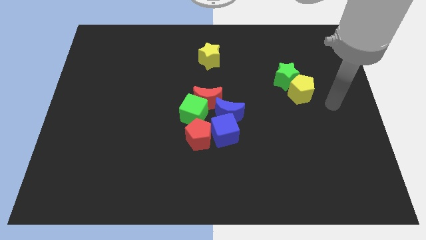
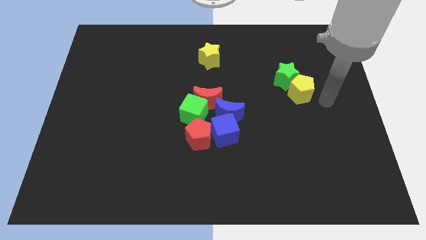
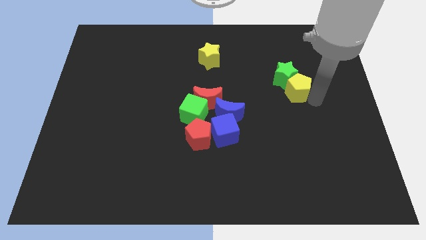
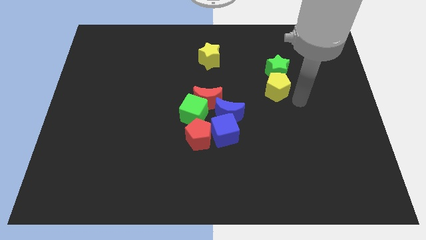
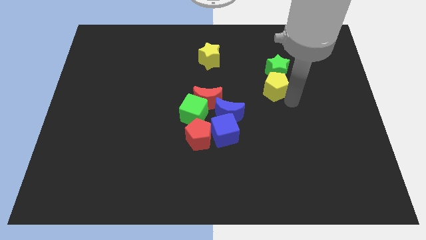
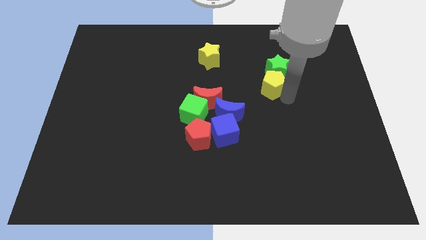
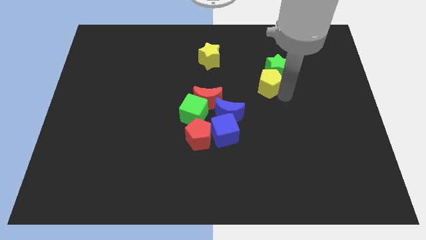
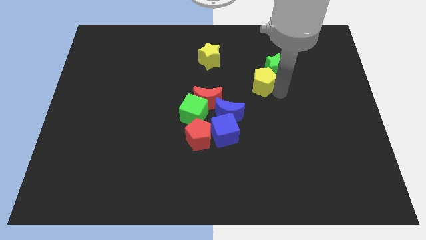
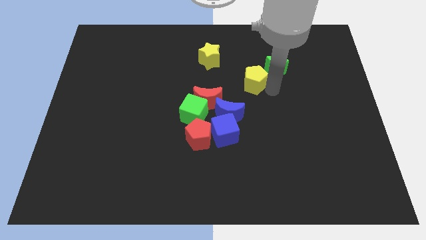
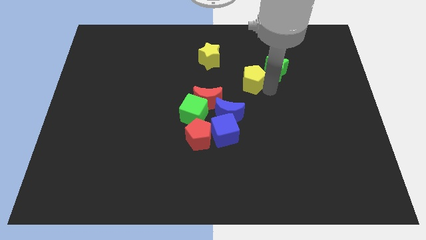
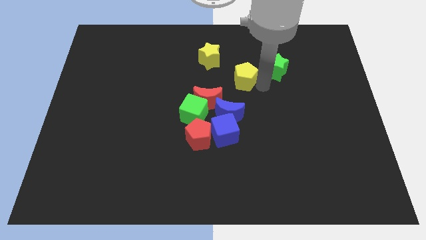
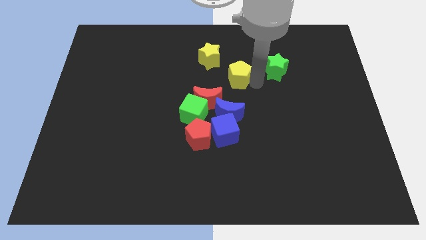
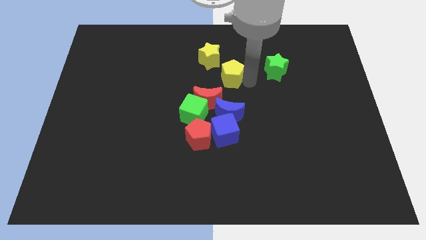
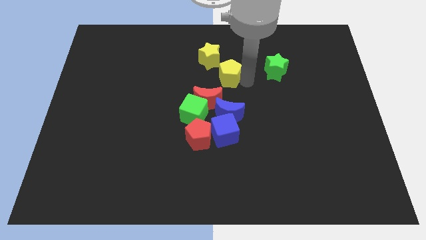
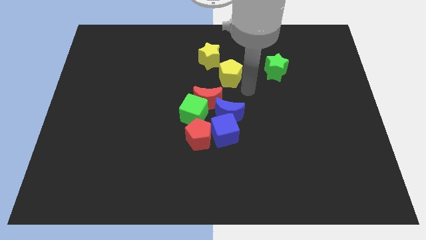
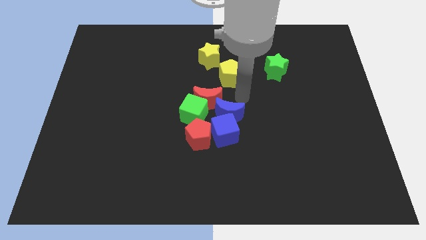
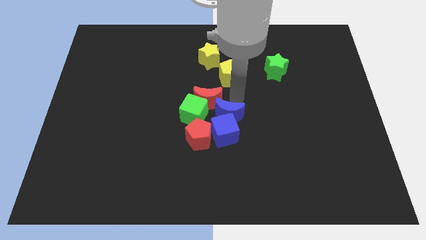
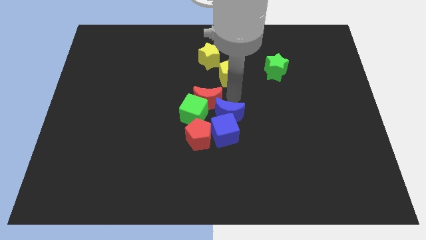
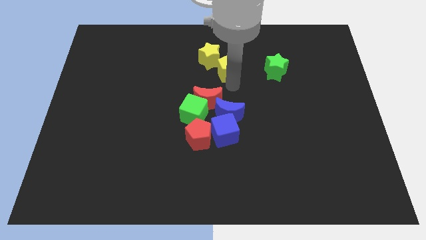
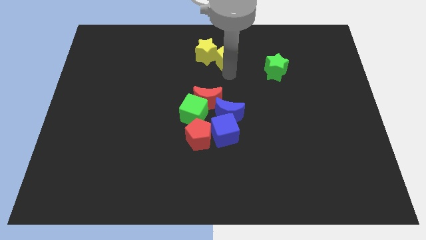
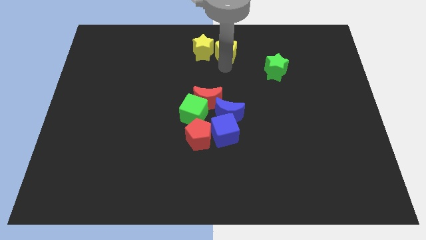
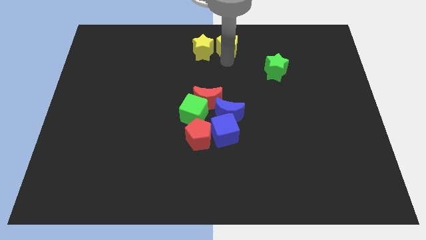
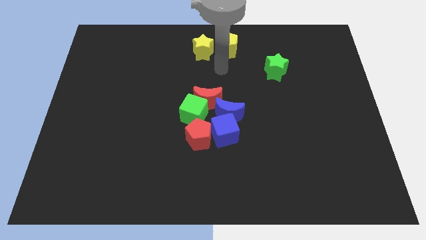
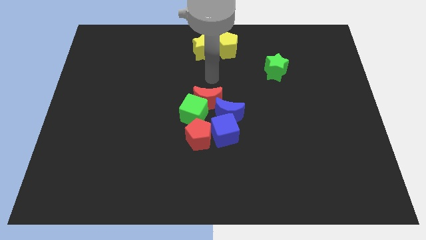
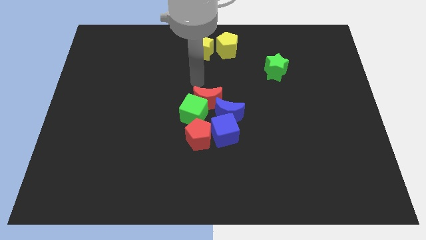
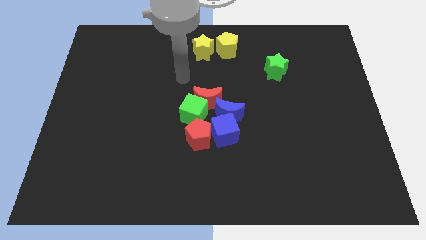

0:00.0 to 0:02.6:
separate the yellow pentagon into yellow star

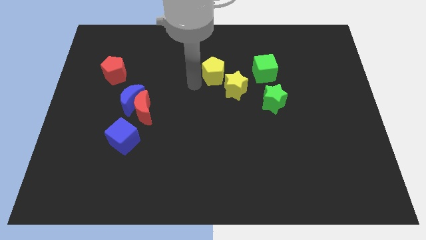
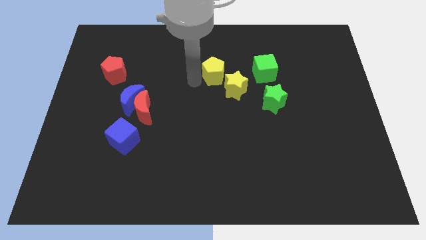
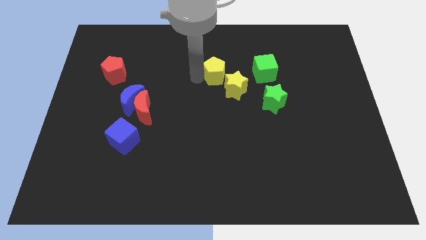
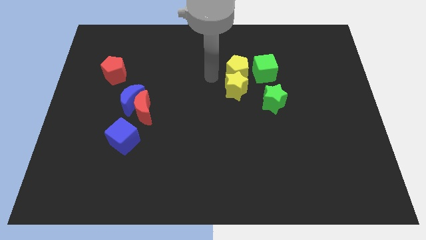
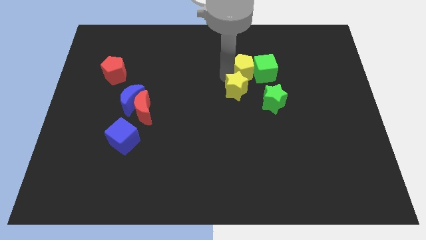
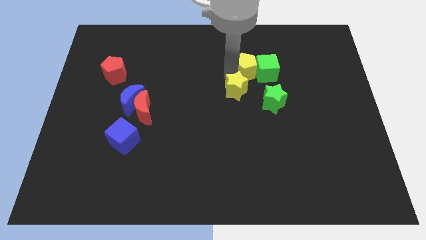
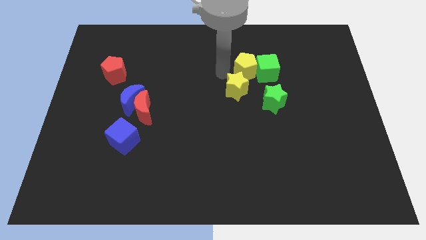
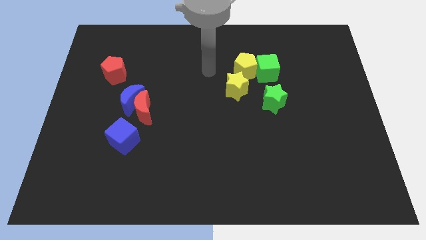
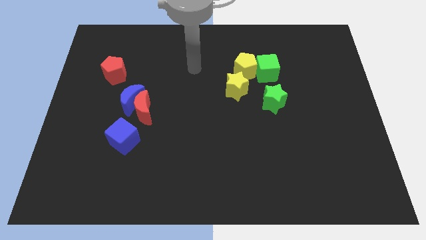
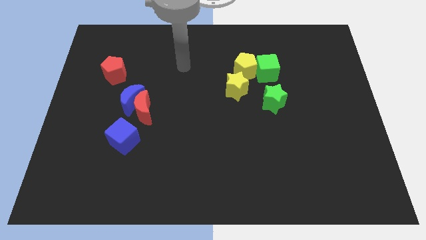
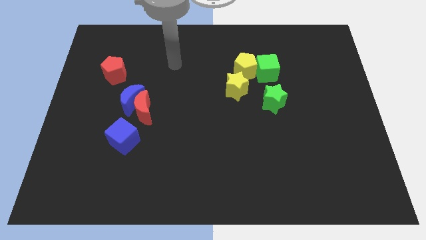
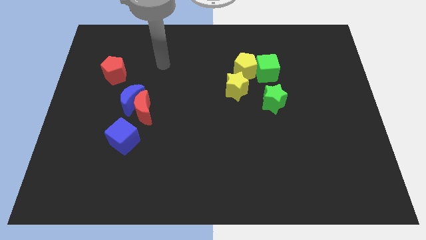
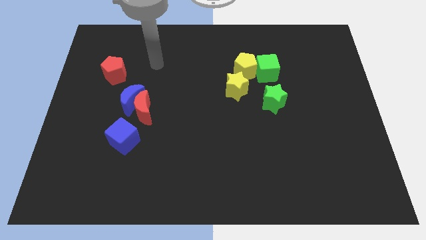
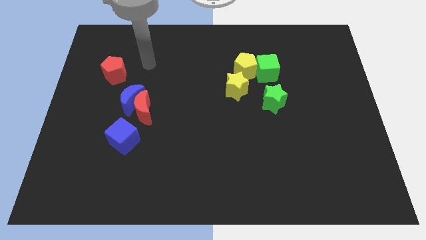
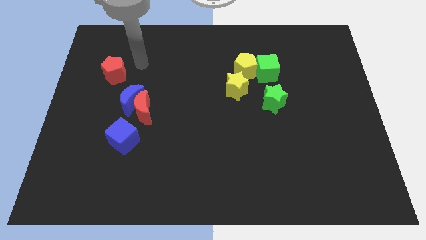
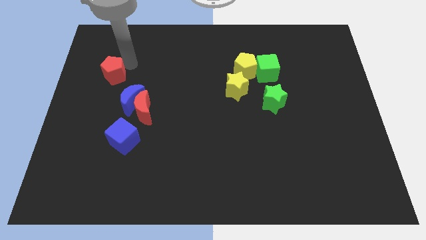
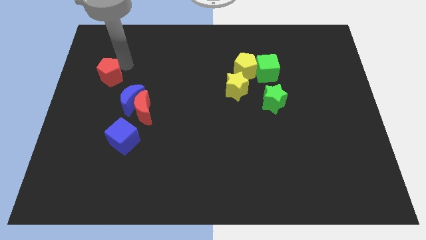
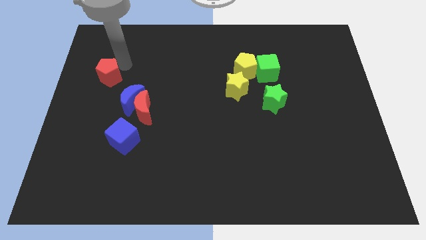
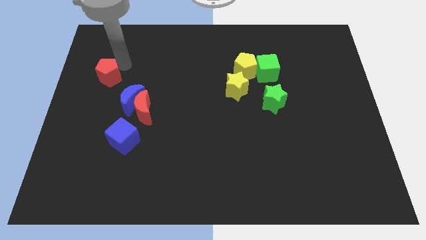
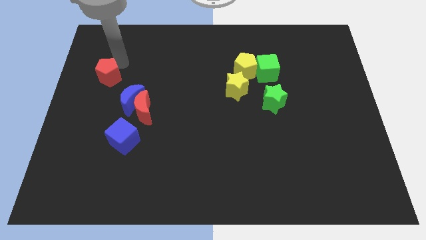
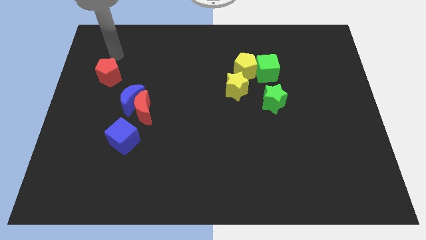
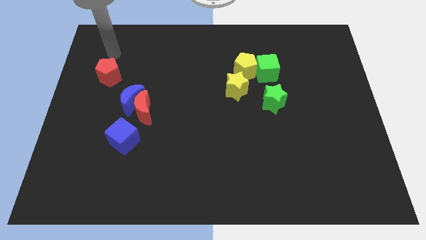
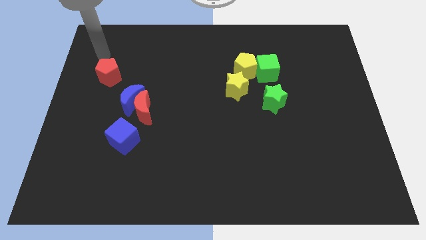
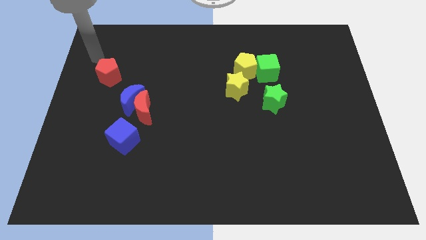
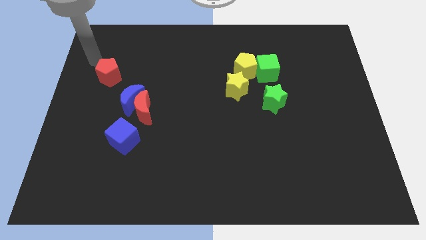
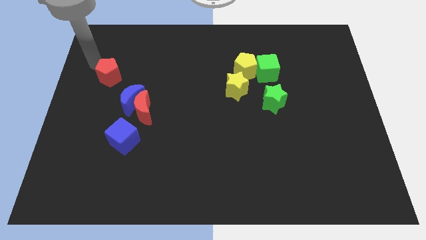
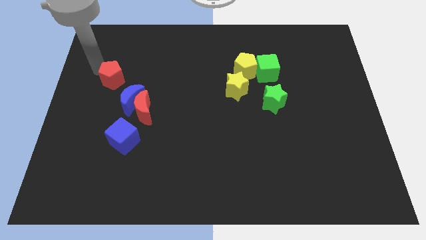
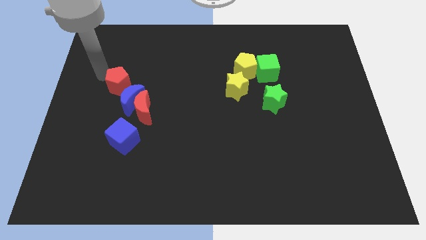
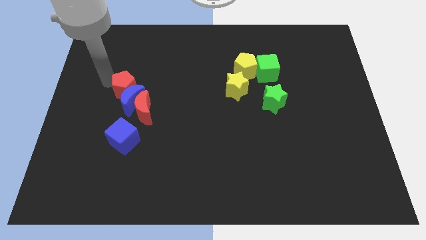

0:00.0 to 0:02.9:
push red pentagon into blue moon

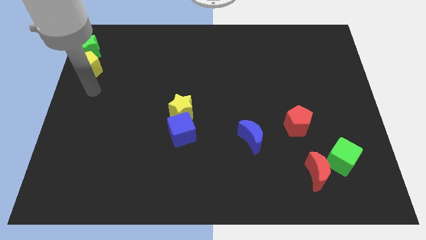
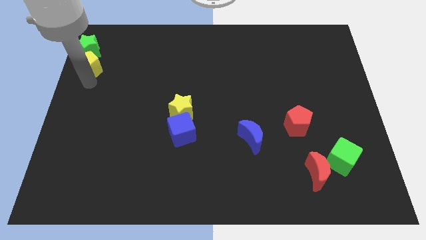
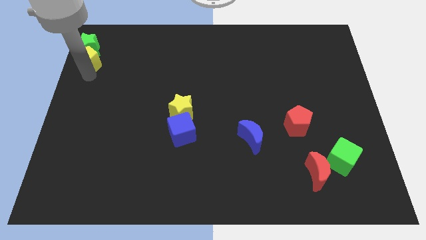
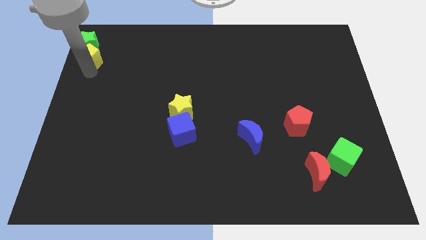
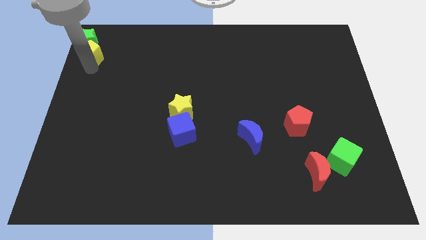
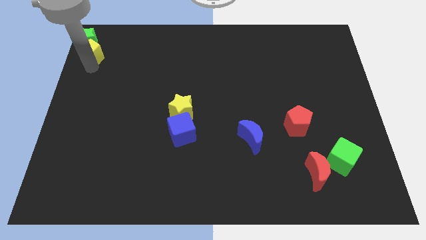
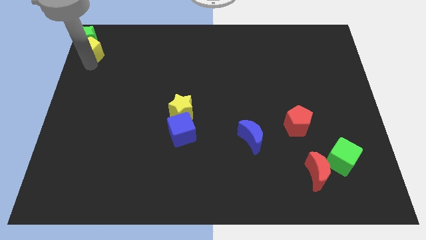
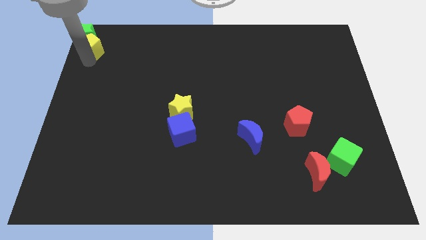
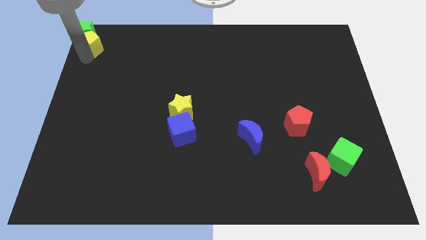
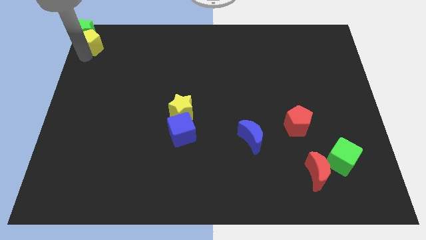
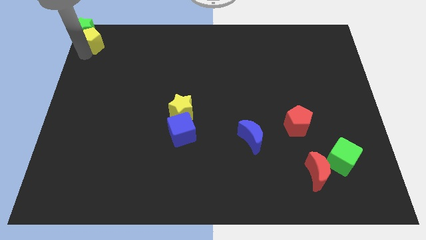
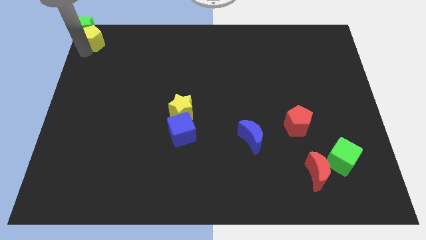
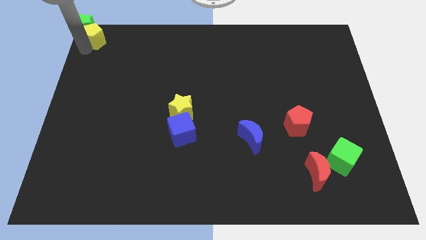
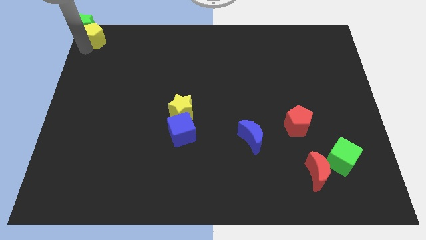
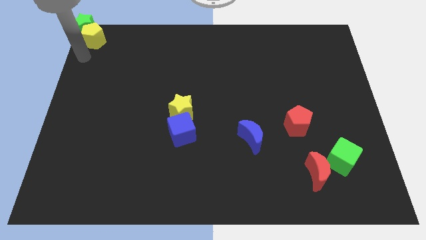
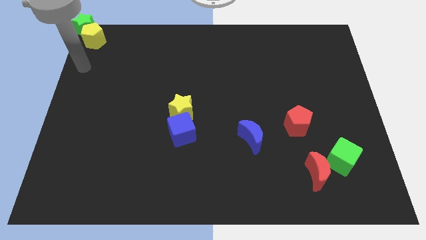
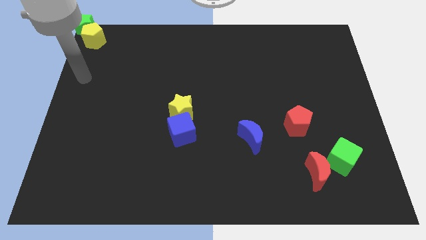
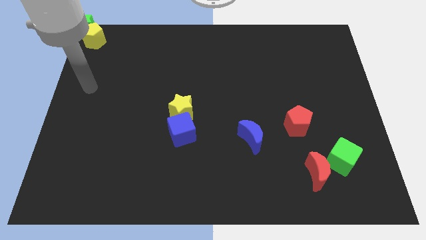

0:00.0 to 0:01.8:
place the yellow pentagon and green star to the top left corner of the board

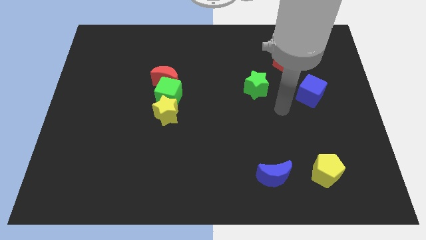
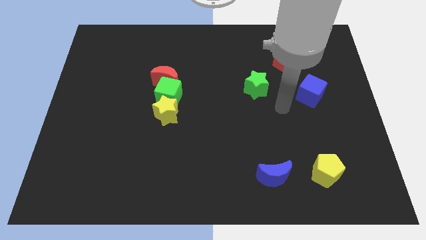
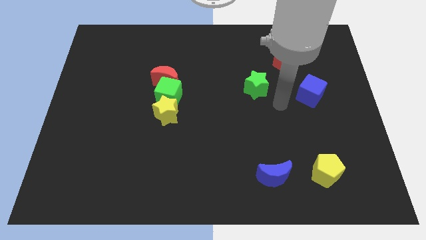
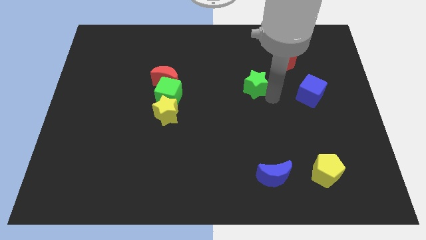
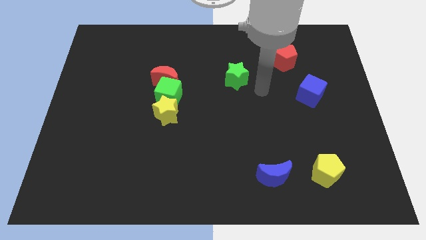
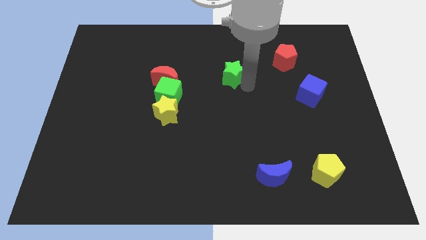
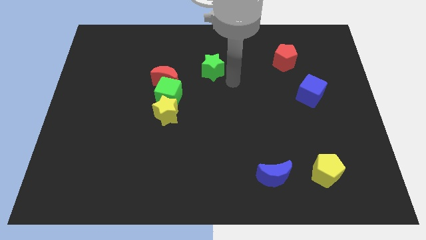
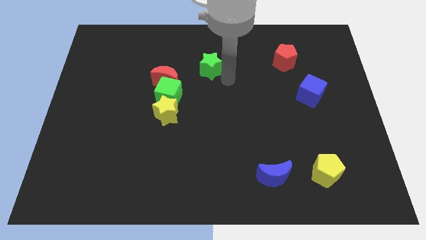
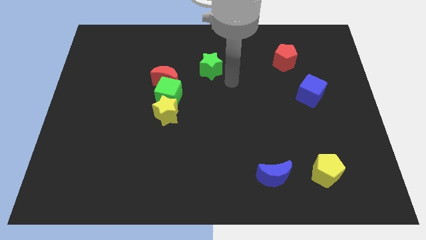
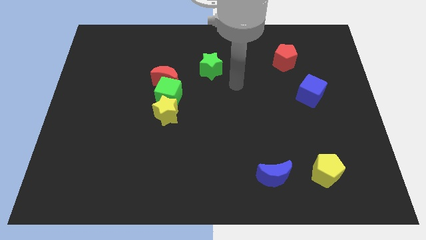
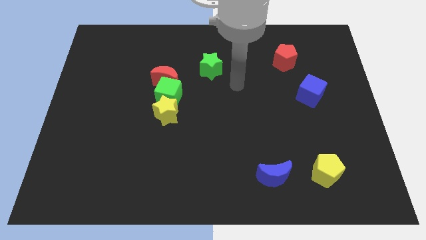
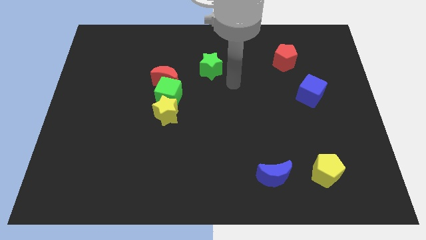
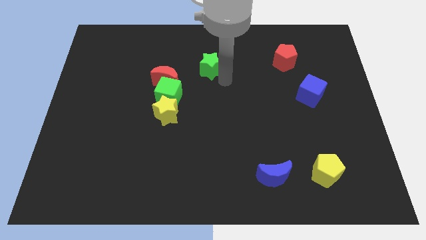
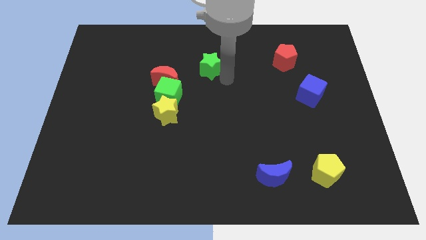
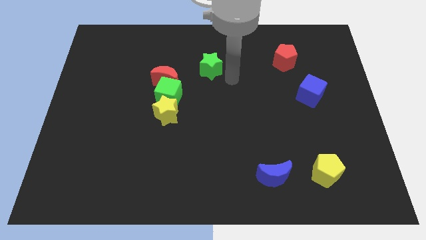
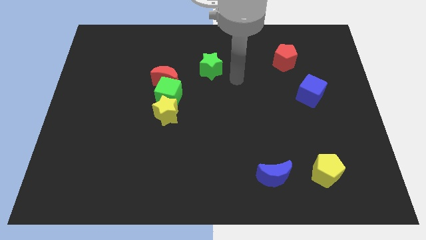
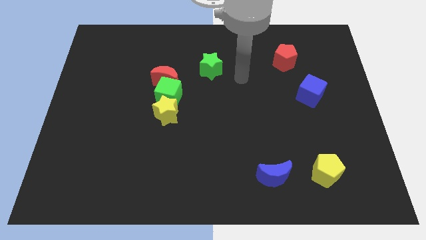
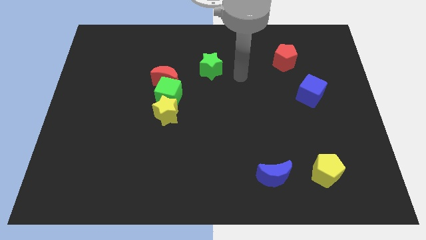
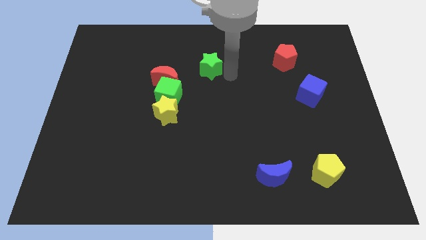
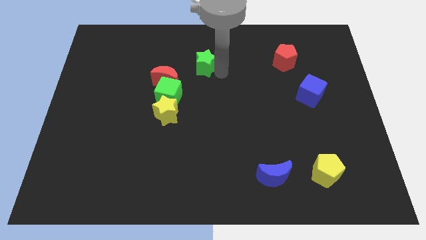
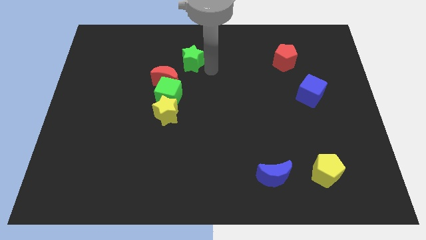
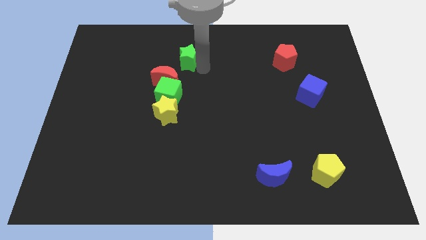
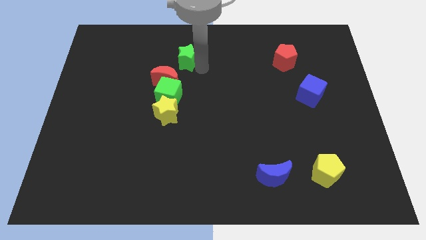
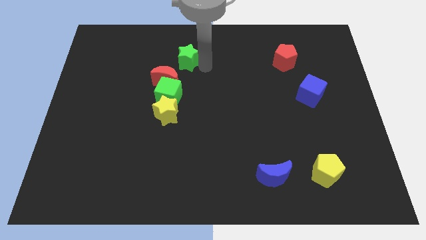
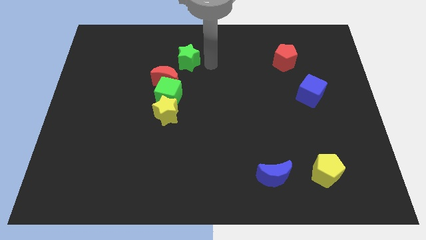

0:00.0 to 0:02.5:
drag the green star towards the top left side of the board
